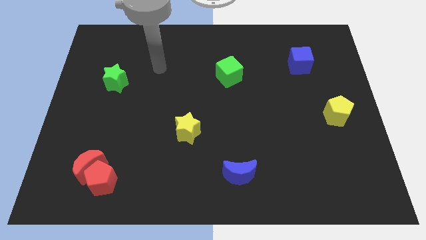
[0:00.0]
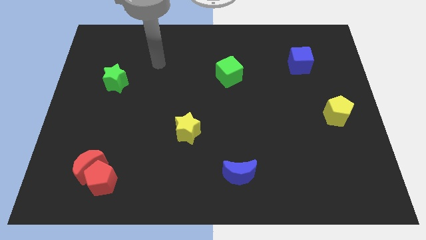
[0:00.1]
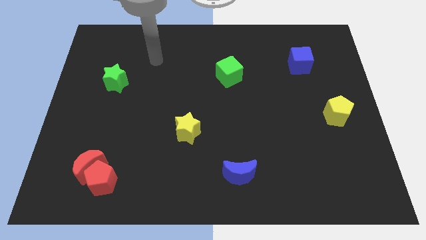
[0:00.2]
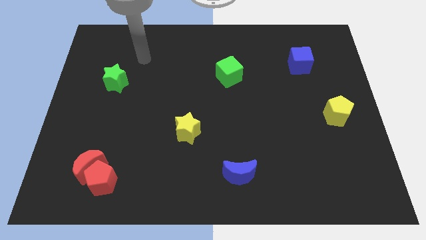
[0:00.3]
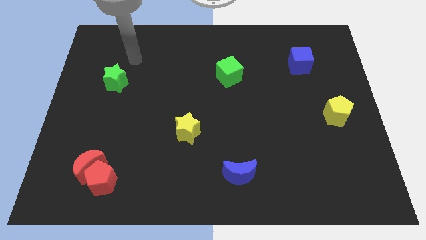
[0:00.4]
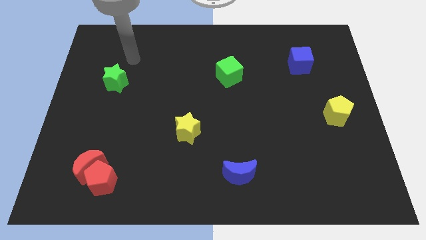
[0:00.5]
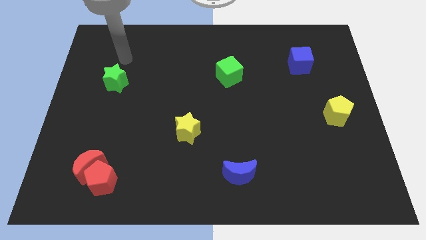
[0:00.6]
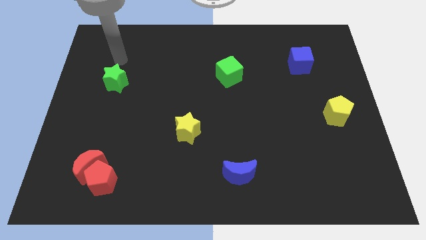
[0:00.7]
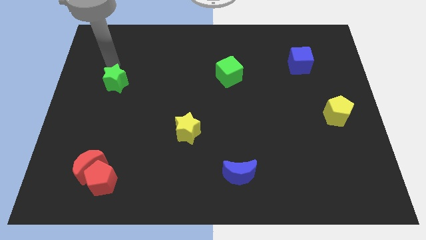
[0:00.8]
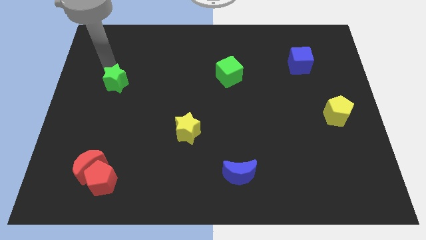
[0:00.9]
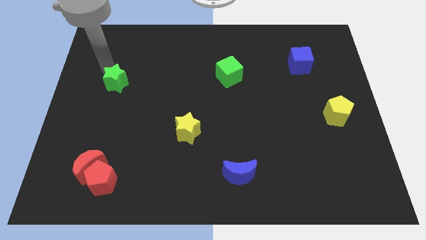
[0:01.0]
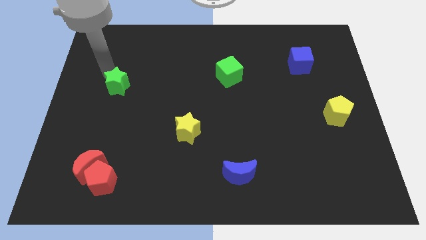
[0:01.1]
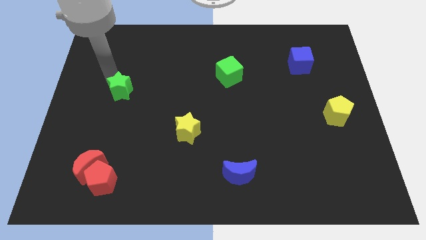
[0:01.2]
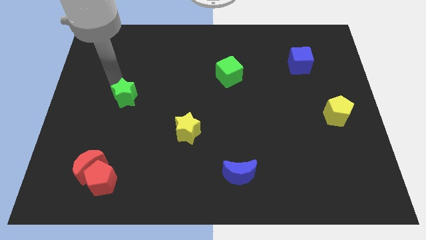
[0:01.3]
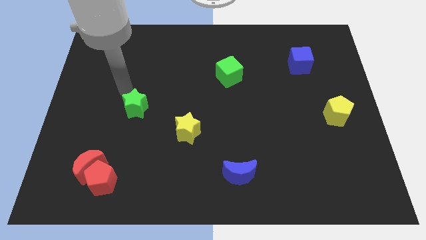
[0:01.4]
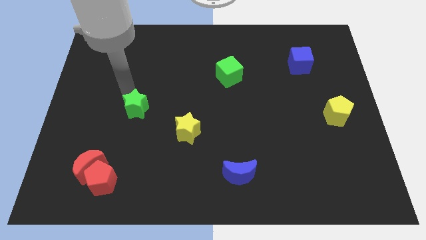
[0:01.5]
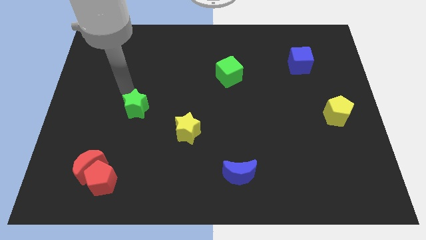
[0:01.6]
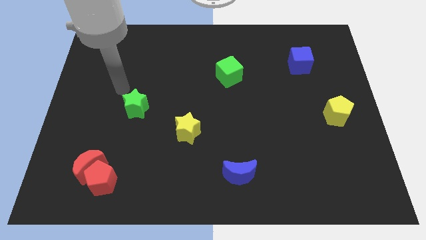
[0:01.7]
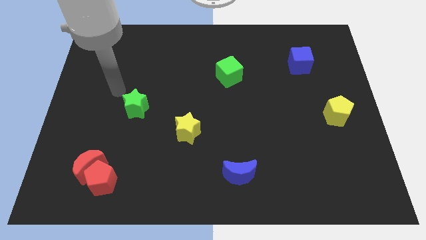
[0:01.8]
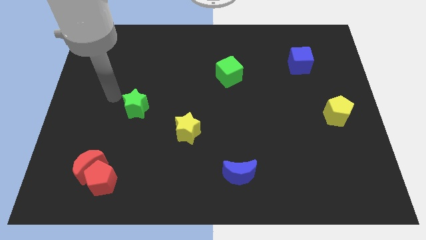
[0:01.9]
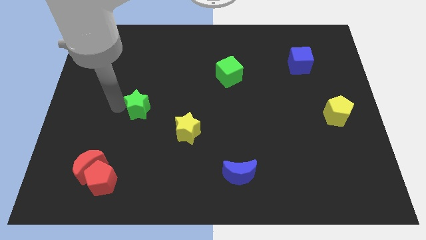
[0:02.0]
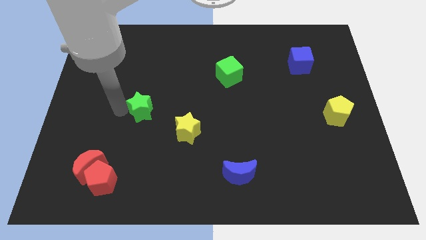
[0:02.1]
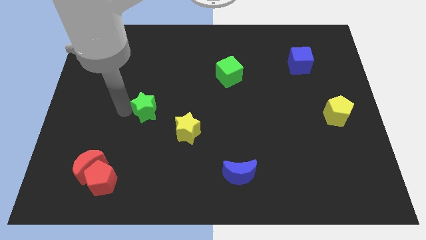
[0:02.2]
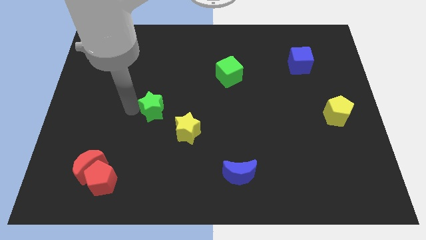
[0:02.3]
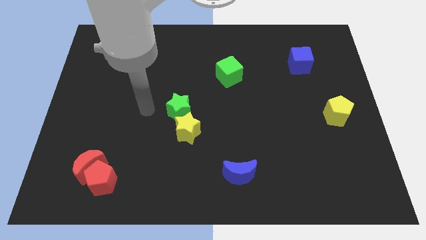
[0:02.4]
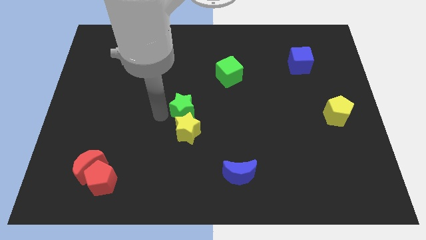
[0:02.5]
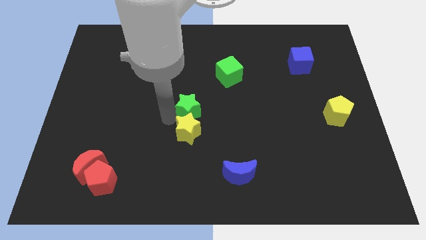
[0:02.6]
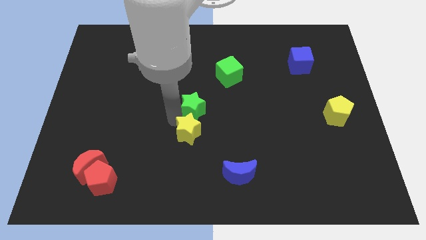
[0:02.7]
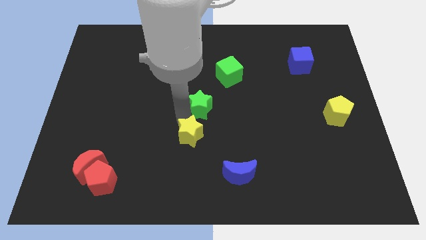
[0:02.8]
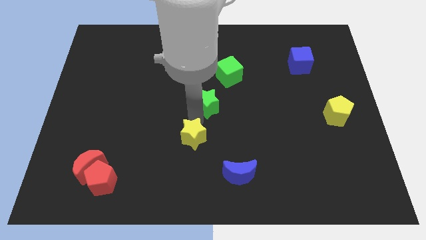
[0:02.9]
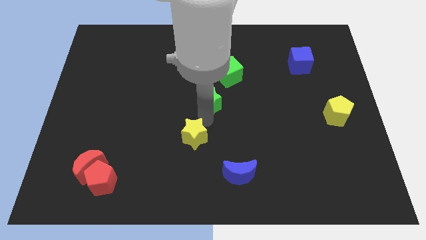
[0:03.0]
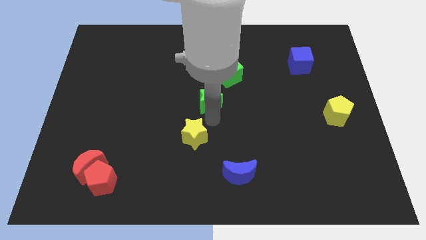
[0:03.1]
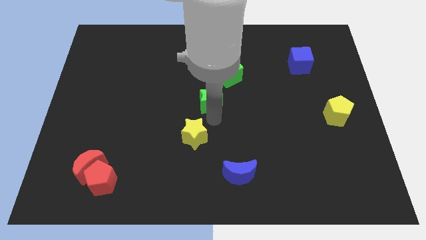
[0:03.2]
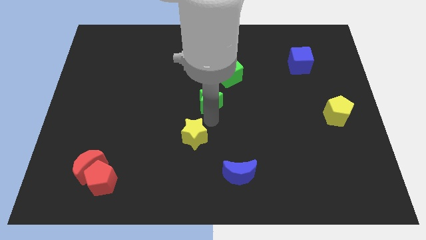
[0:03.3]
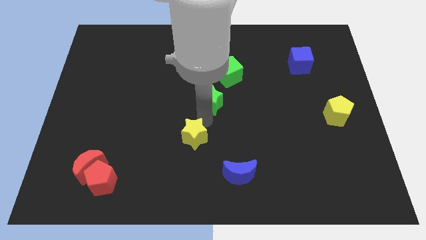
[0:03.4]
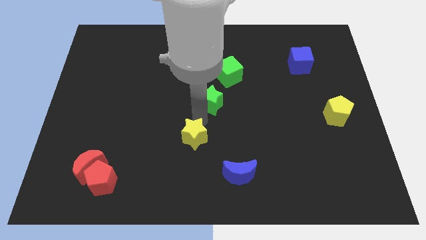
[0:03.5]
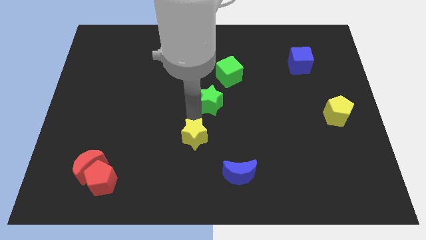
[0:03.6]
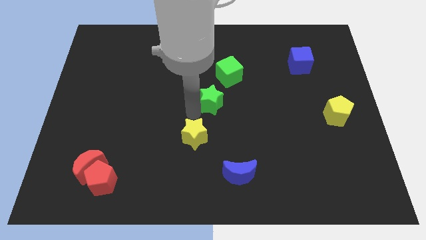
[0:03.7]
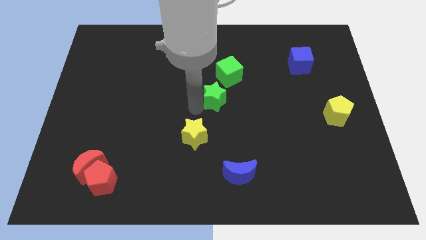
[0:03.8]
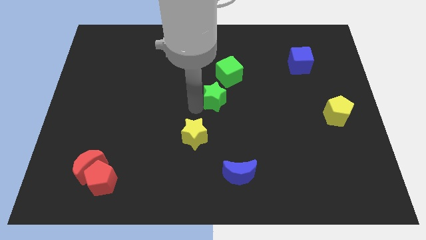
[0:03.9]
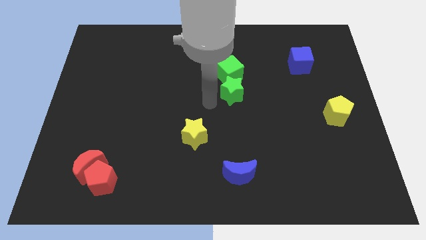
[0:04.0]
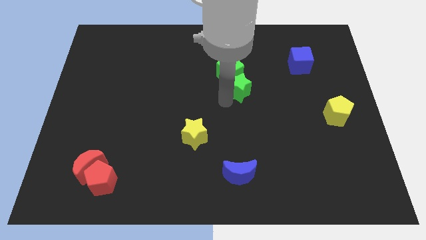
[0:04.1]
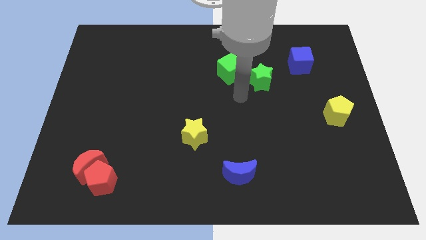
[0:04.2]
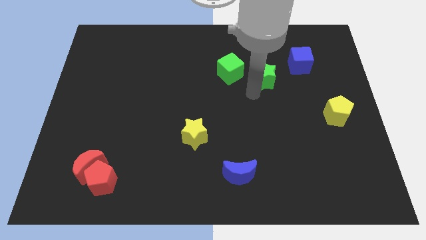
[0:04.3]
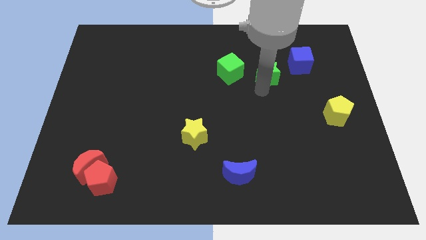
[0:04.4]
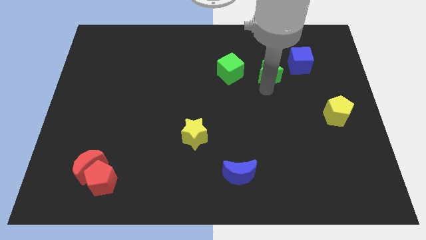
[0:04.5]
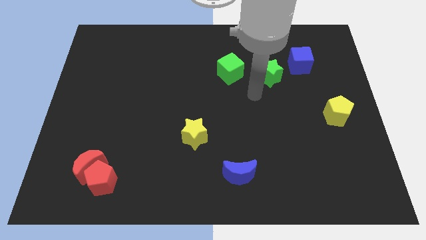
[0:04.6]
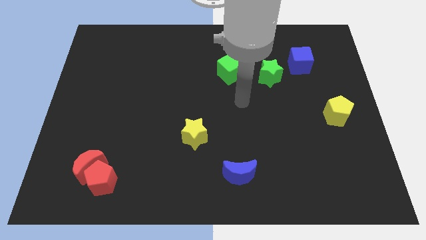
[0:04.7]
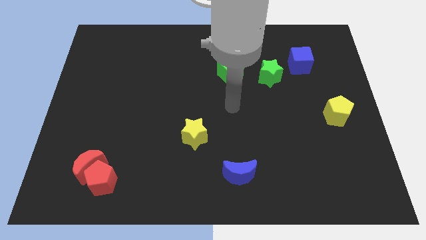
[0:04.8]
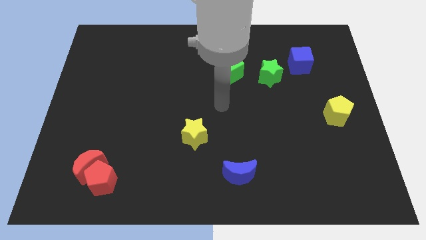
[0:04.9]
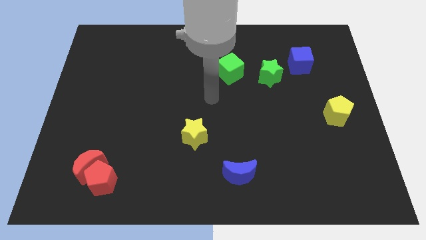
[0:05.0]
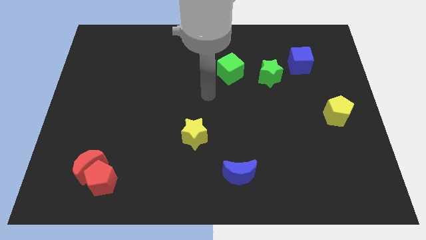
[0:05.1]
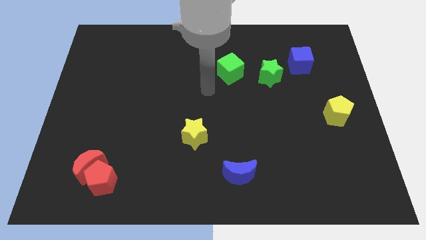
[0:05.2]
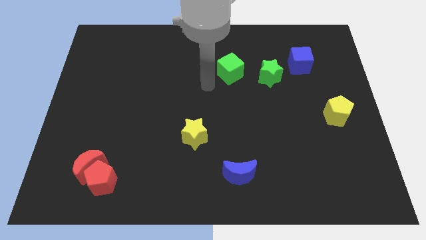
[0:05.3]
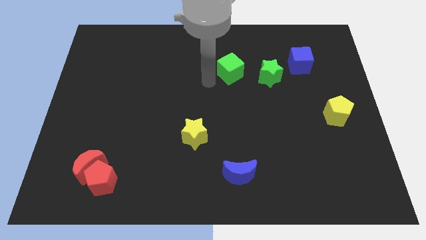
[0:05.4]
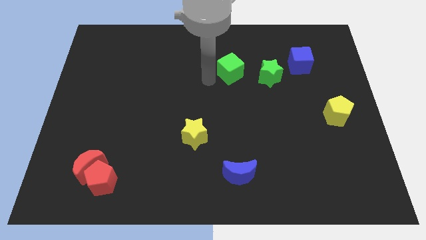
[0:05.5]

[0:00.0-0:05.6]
place the green star beside the green cube

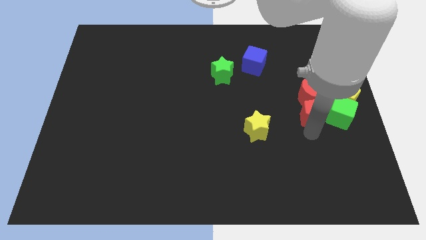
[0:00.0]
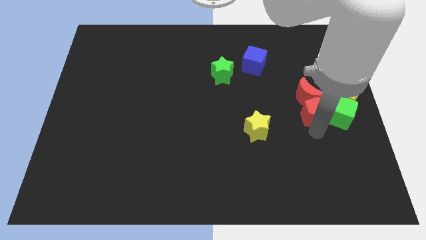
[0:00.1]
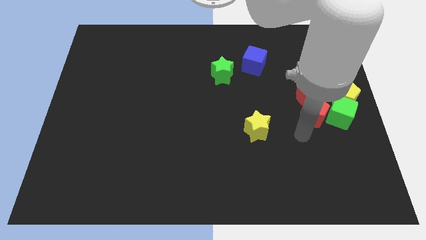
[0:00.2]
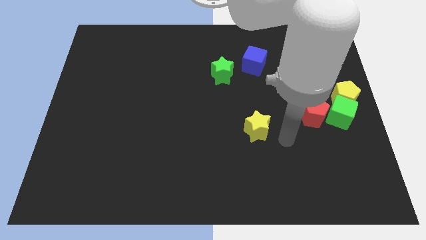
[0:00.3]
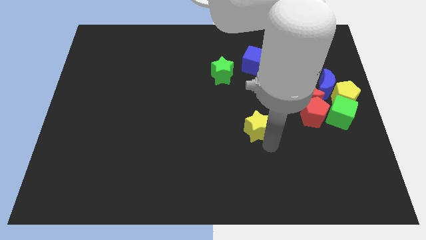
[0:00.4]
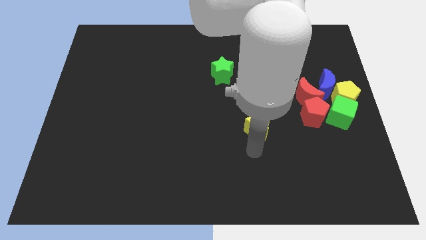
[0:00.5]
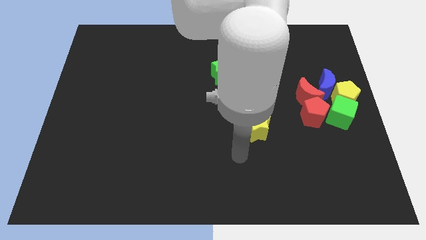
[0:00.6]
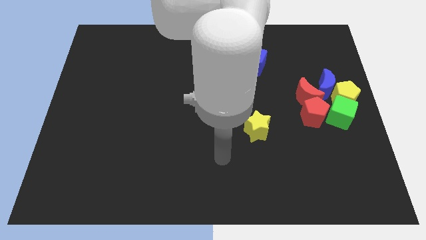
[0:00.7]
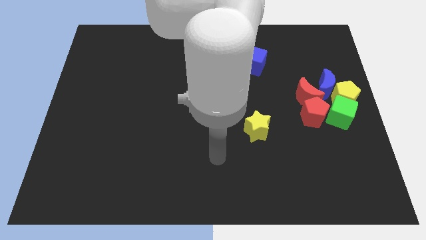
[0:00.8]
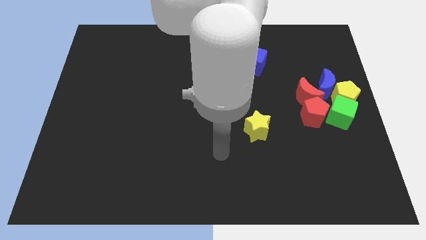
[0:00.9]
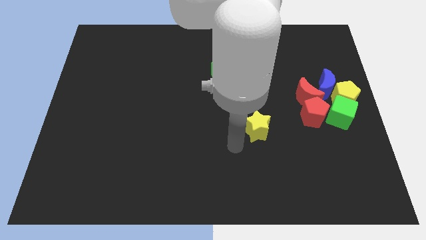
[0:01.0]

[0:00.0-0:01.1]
place your arm diagonal to the yellow star

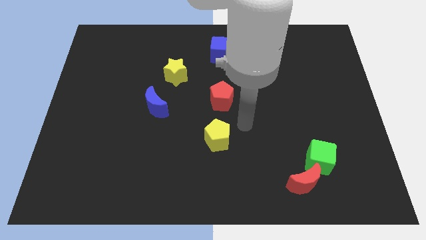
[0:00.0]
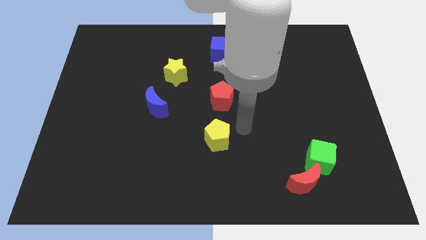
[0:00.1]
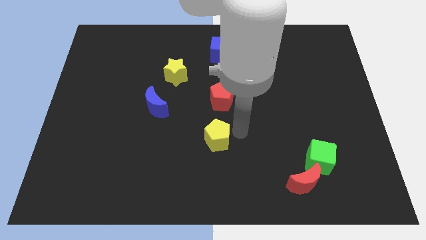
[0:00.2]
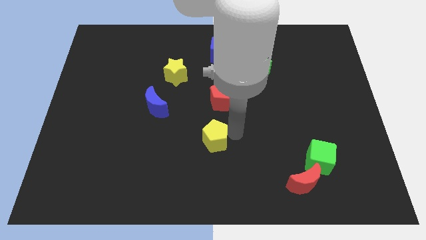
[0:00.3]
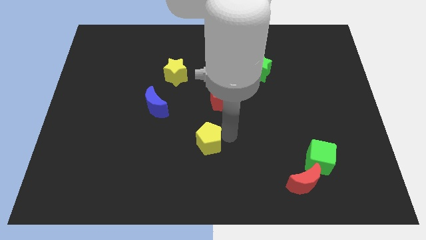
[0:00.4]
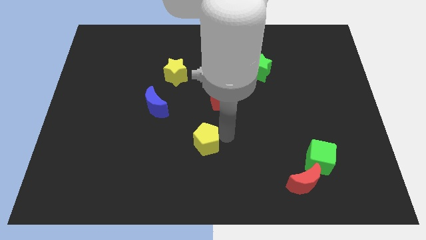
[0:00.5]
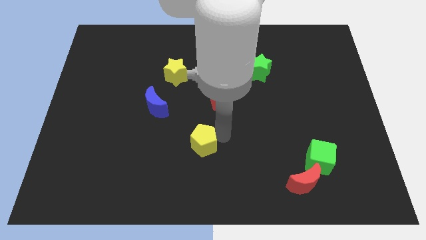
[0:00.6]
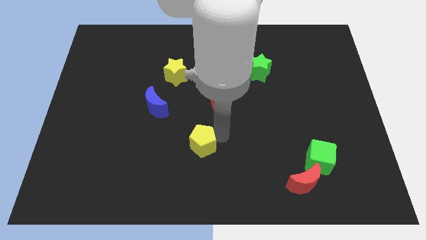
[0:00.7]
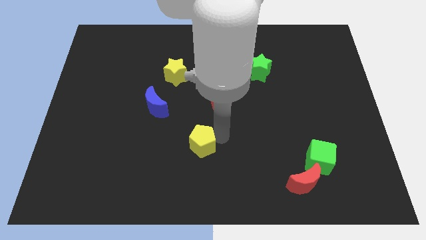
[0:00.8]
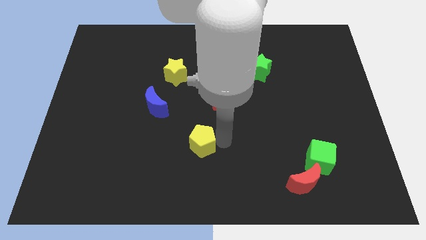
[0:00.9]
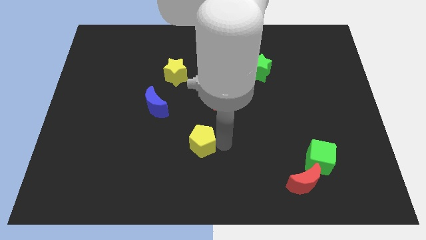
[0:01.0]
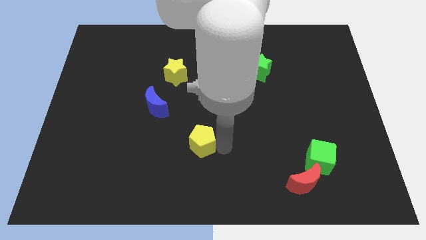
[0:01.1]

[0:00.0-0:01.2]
place yellow pentagon to the left bottom of red pentagon

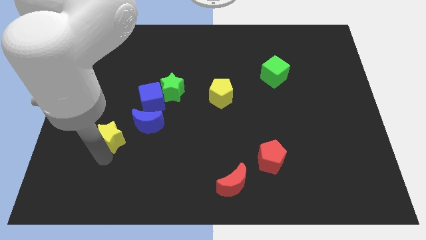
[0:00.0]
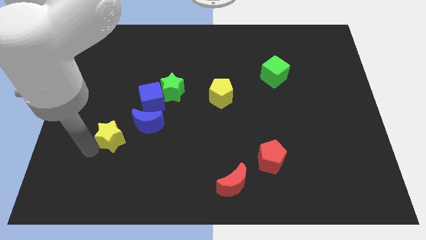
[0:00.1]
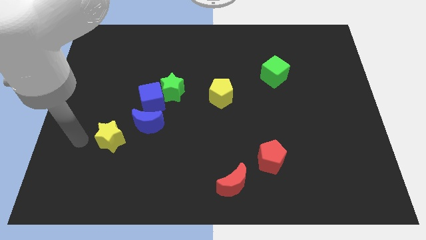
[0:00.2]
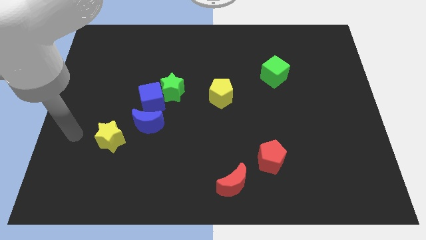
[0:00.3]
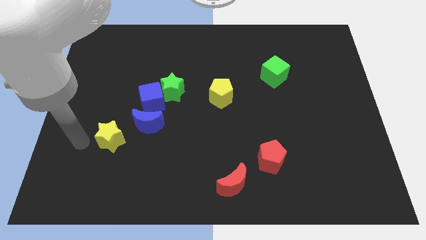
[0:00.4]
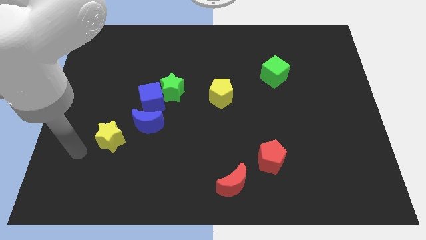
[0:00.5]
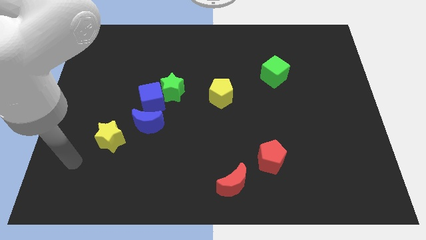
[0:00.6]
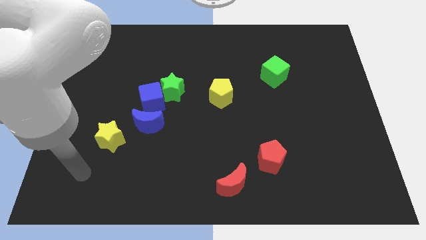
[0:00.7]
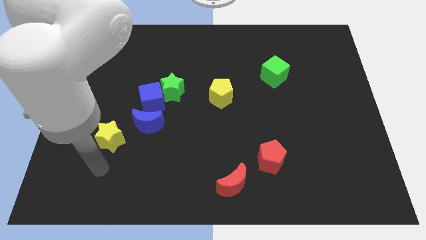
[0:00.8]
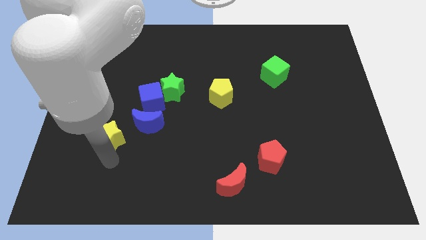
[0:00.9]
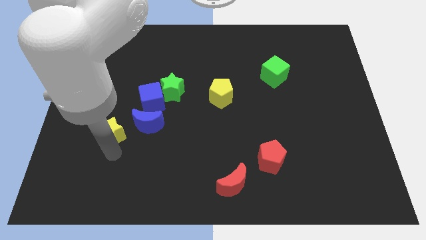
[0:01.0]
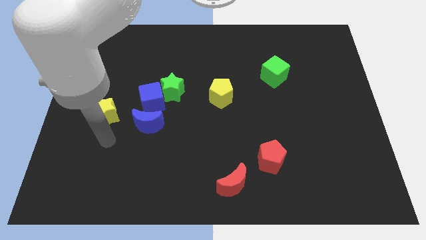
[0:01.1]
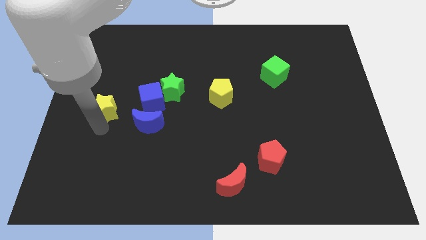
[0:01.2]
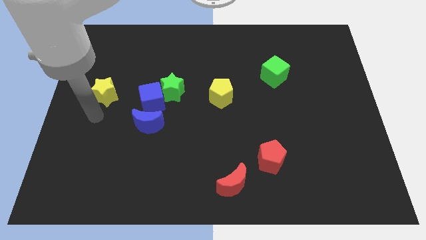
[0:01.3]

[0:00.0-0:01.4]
put the yellow star to the left side of the blue cube
